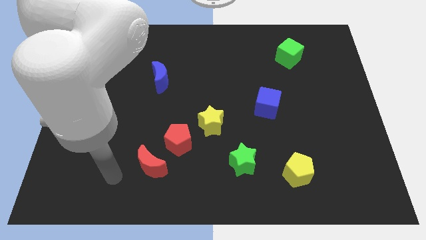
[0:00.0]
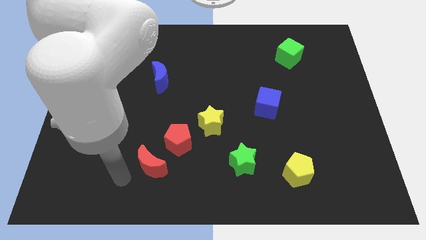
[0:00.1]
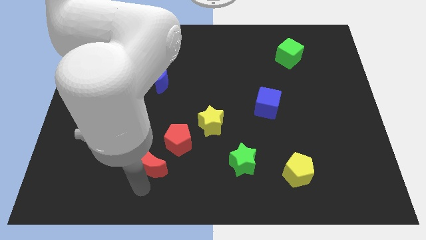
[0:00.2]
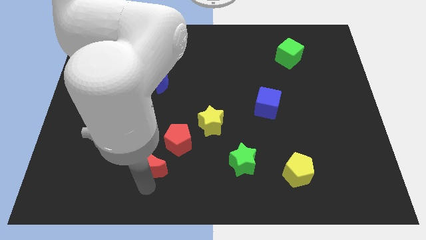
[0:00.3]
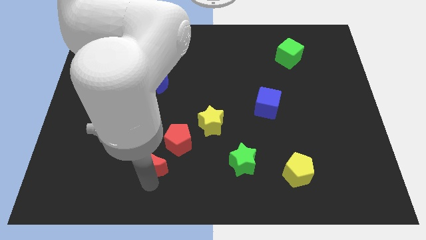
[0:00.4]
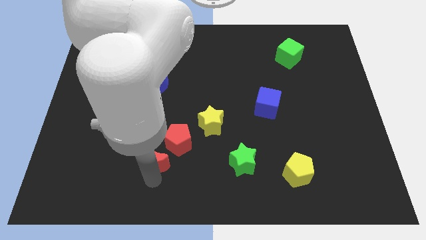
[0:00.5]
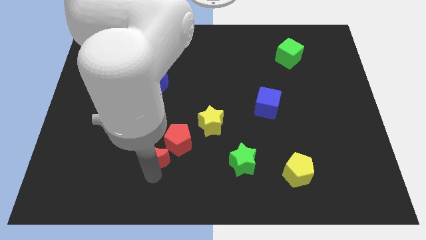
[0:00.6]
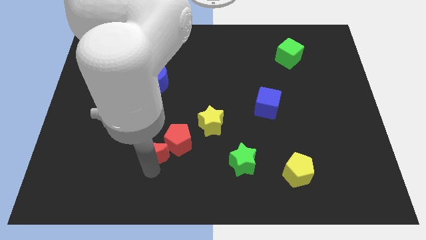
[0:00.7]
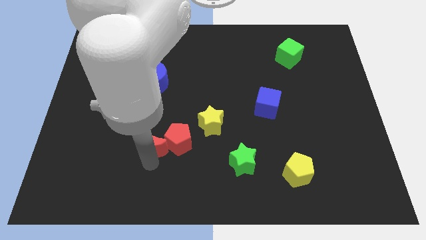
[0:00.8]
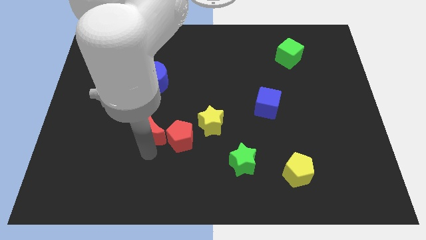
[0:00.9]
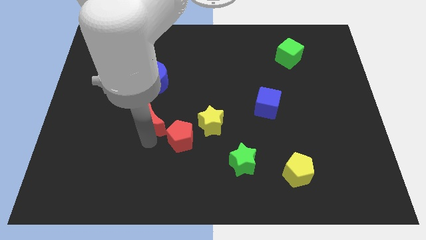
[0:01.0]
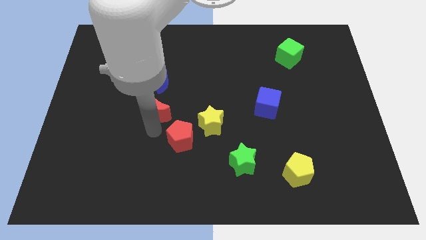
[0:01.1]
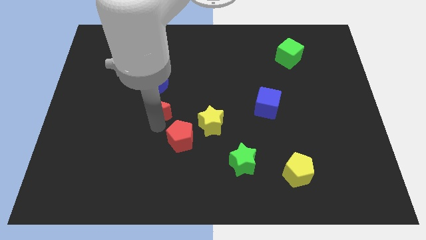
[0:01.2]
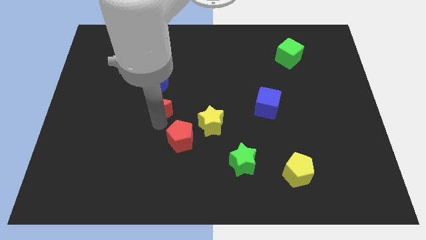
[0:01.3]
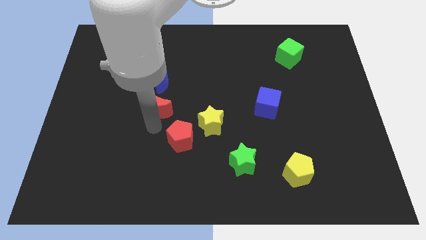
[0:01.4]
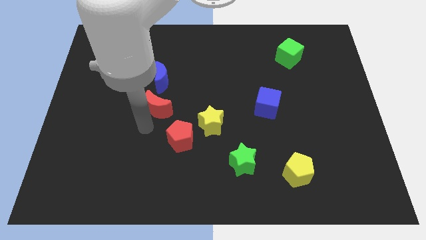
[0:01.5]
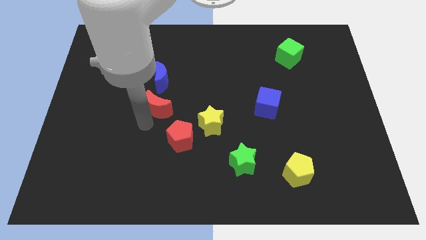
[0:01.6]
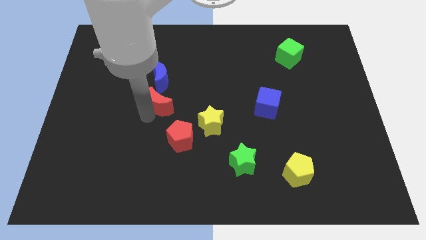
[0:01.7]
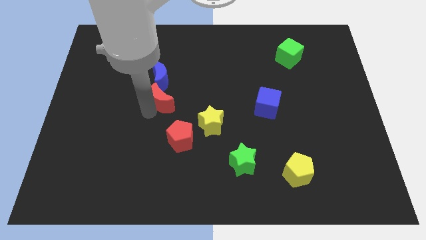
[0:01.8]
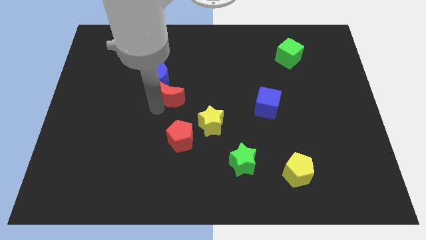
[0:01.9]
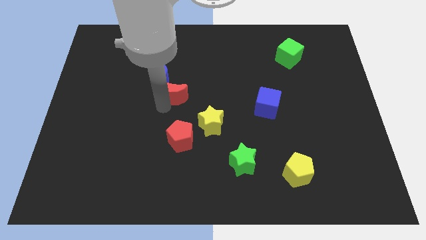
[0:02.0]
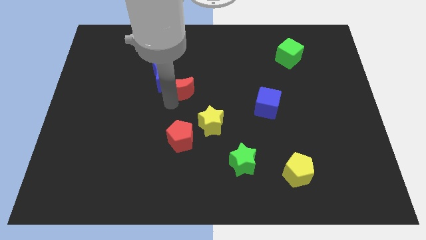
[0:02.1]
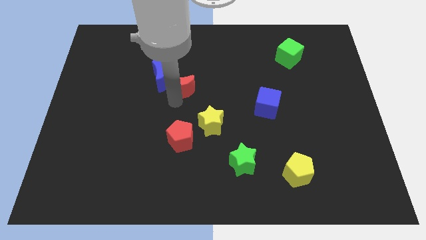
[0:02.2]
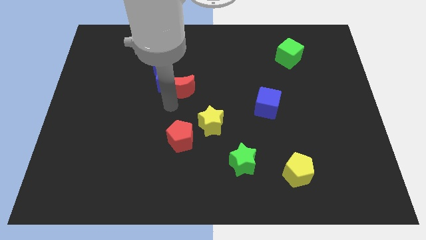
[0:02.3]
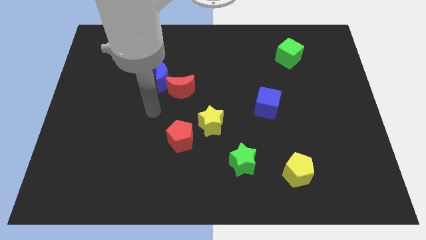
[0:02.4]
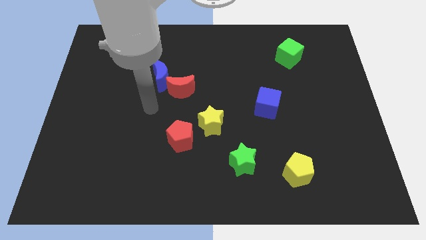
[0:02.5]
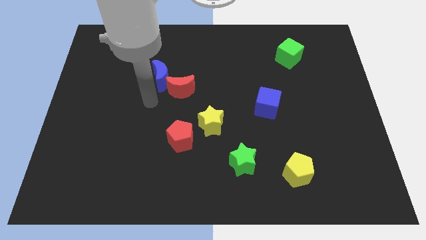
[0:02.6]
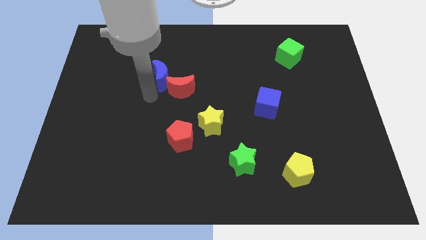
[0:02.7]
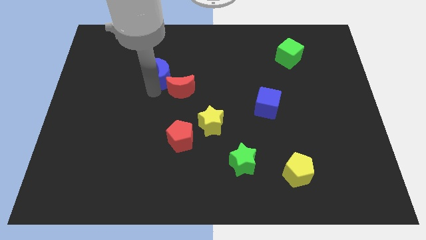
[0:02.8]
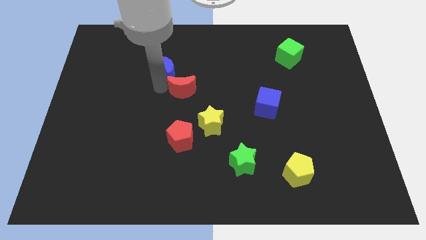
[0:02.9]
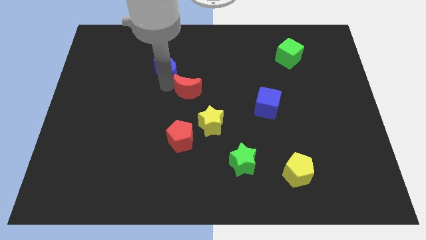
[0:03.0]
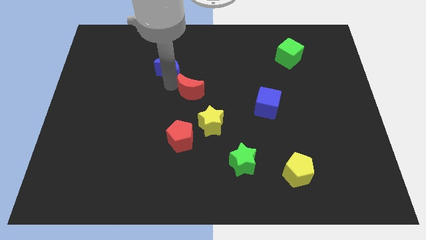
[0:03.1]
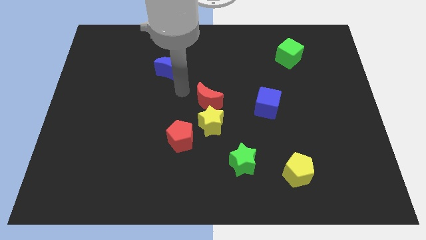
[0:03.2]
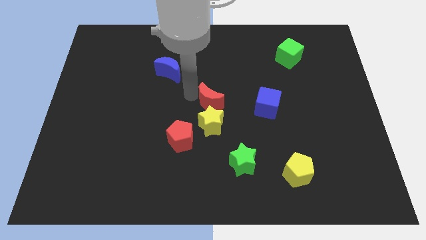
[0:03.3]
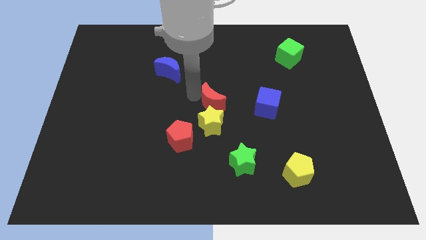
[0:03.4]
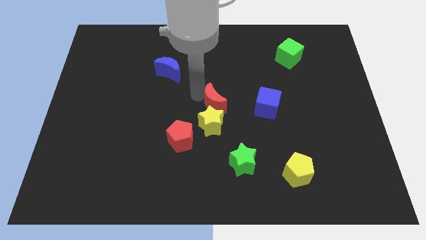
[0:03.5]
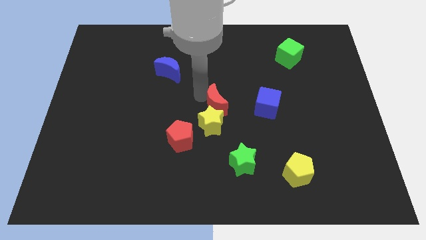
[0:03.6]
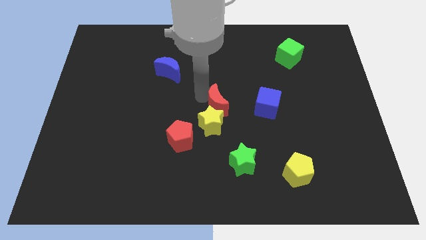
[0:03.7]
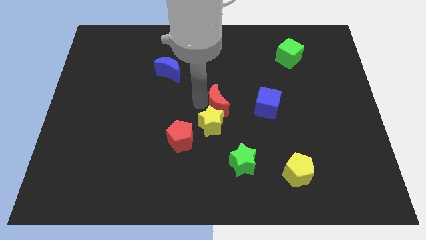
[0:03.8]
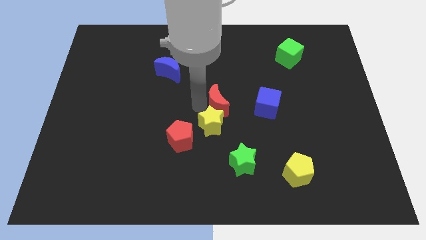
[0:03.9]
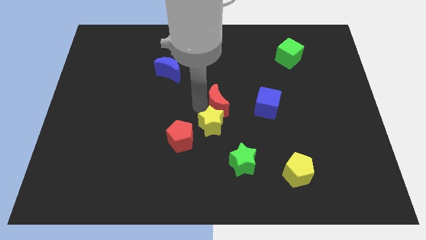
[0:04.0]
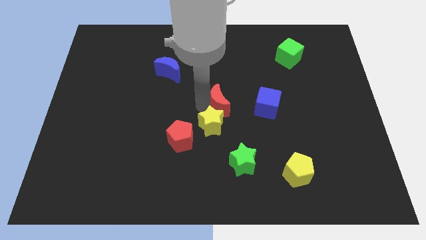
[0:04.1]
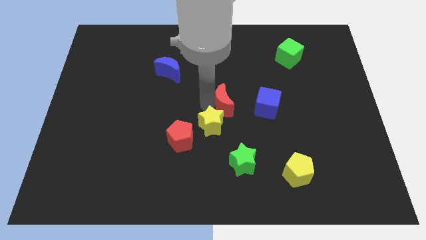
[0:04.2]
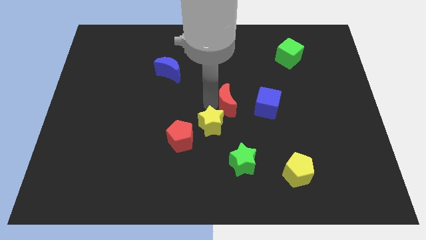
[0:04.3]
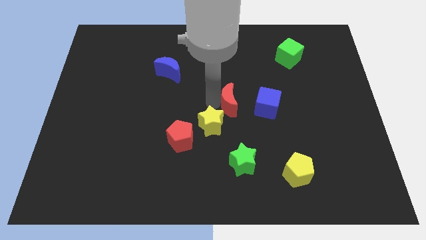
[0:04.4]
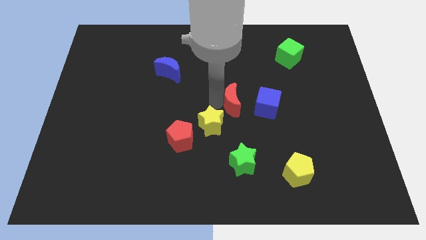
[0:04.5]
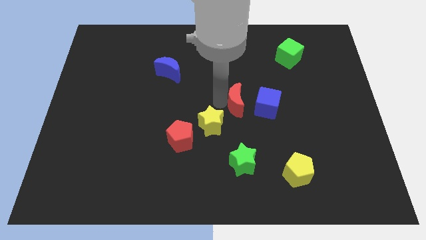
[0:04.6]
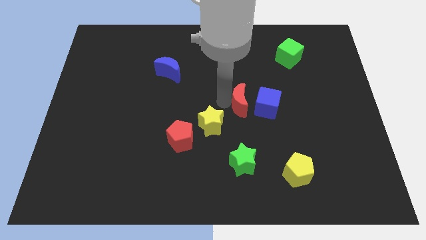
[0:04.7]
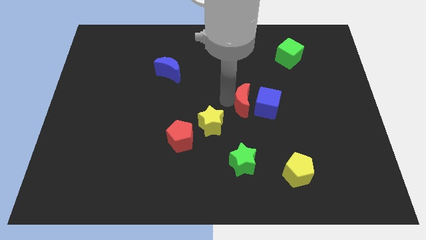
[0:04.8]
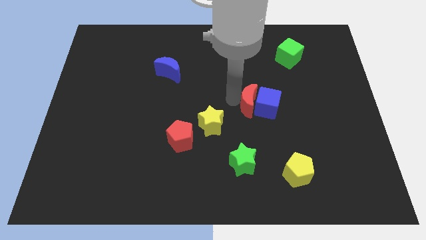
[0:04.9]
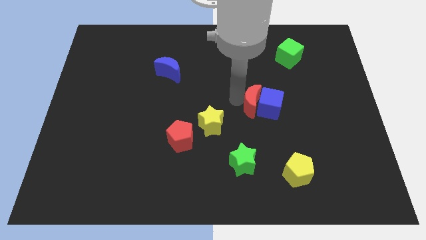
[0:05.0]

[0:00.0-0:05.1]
move the red moon next to the blue cube

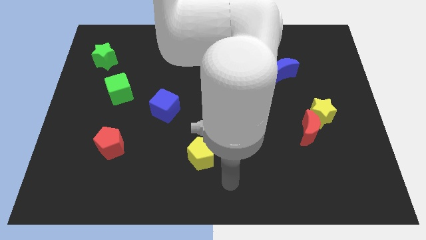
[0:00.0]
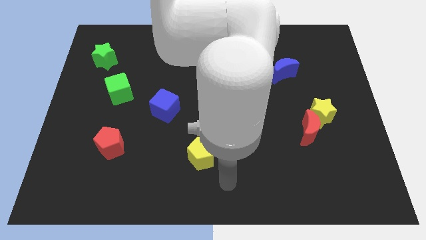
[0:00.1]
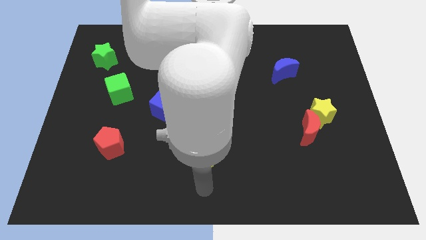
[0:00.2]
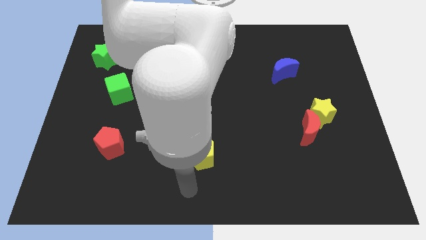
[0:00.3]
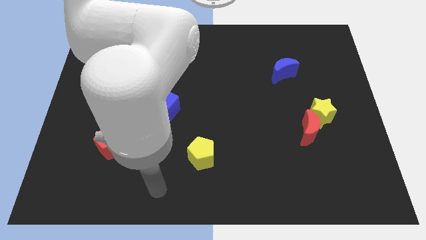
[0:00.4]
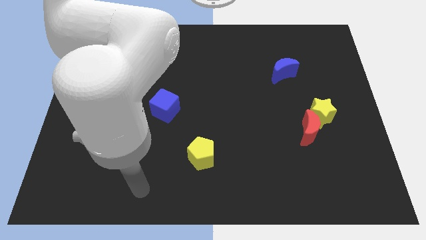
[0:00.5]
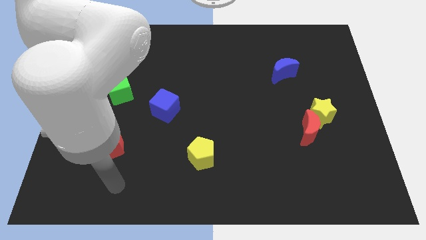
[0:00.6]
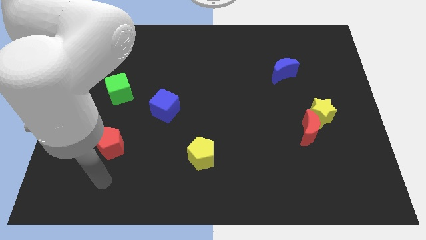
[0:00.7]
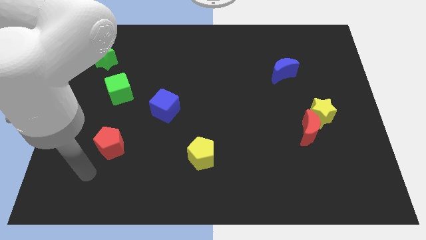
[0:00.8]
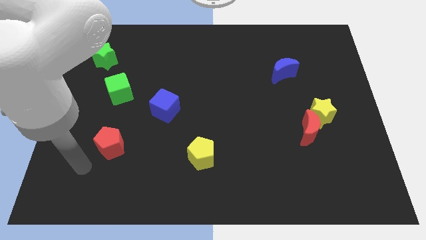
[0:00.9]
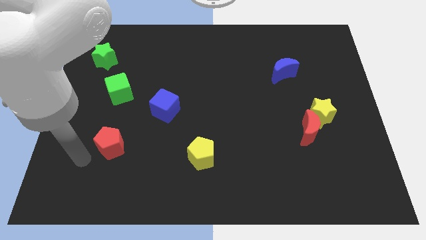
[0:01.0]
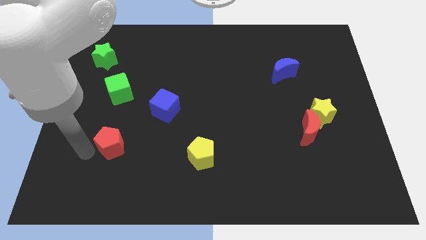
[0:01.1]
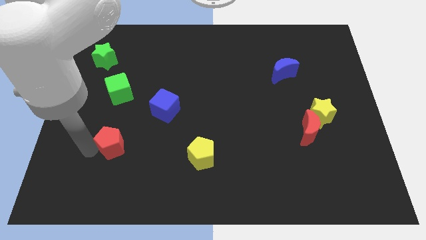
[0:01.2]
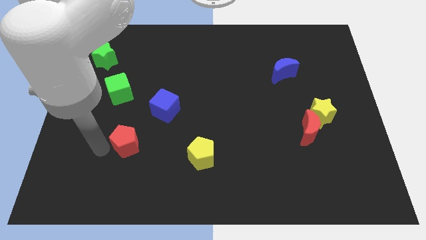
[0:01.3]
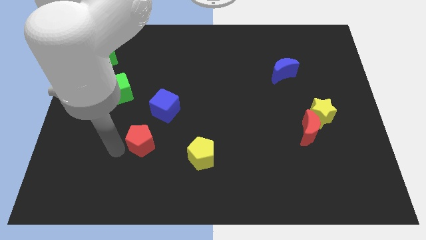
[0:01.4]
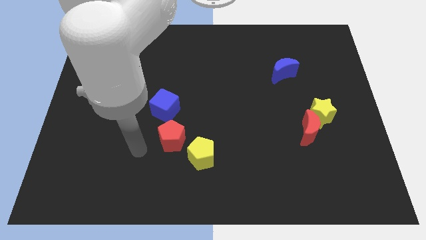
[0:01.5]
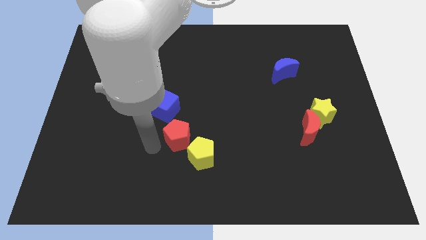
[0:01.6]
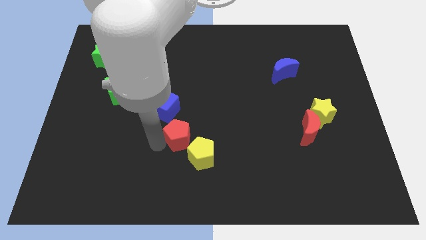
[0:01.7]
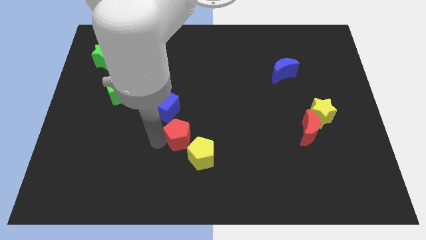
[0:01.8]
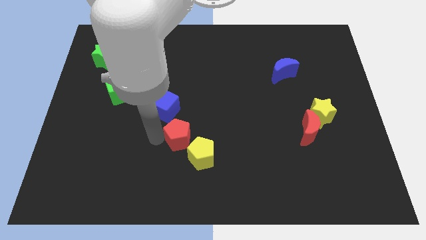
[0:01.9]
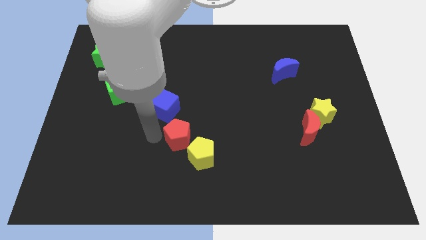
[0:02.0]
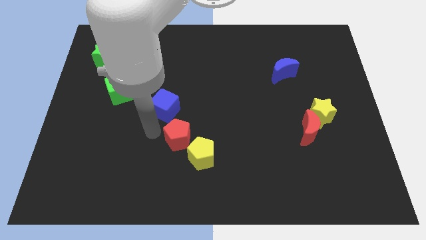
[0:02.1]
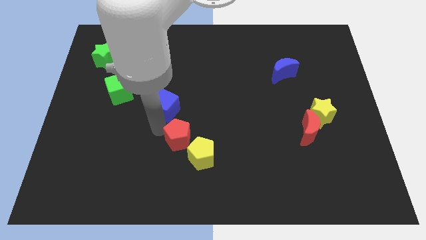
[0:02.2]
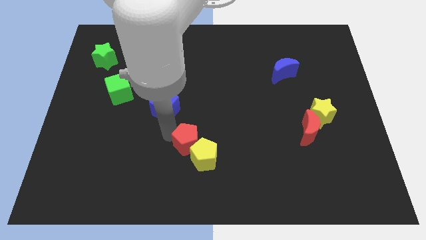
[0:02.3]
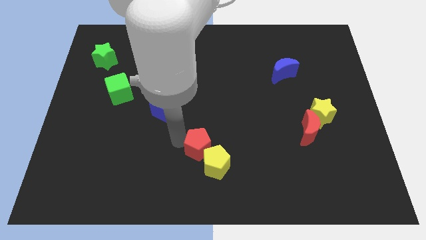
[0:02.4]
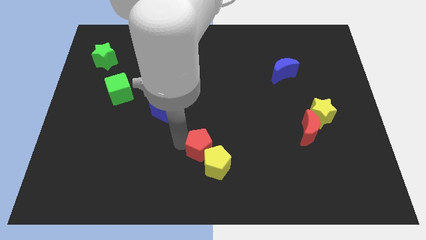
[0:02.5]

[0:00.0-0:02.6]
put the red pentagon next to the yellow pentagon

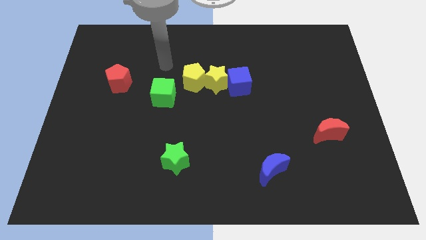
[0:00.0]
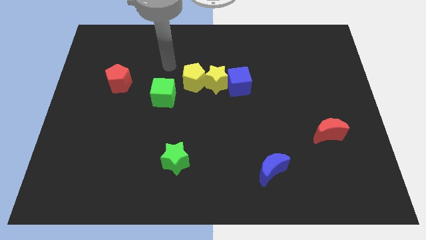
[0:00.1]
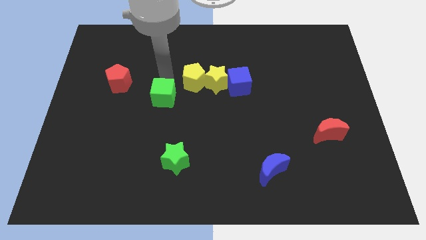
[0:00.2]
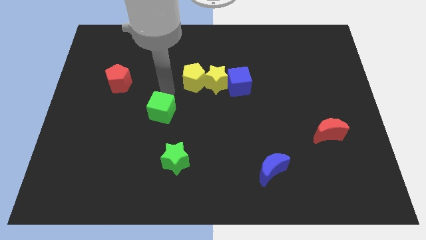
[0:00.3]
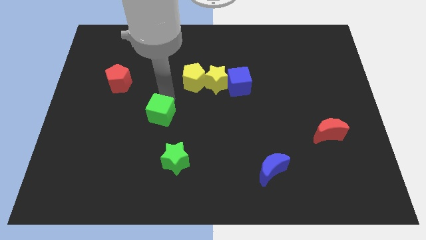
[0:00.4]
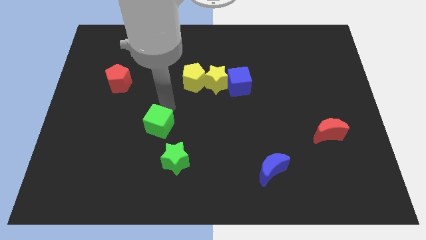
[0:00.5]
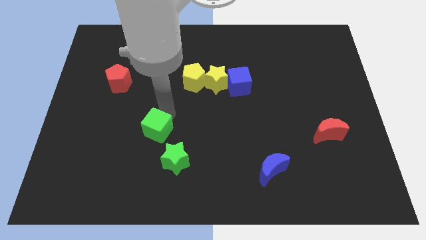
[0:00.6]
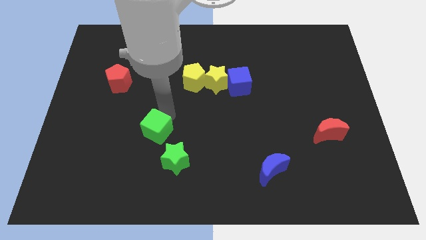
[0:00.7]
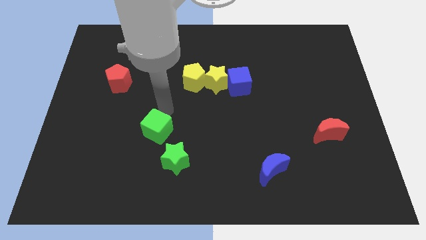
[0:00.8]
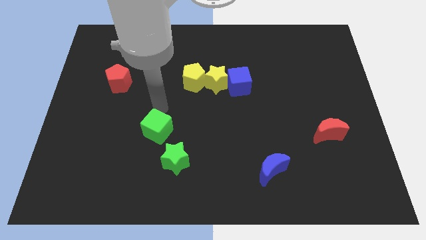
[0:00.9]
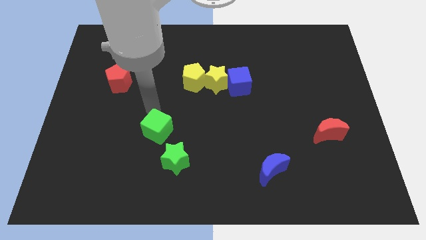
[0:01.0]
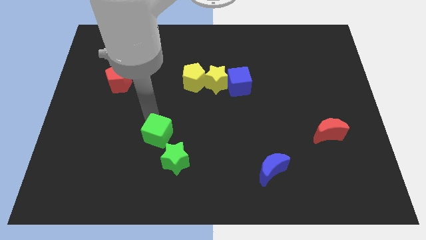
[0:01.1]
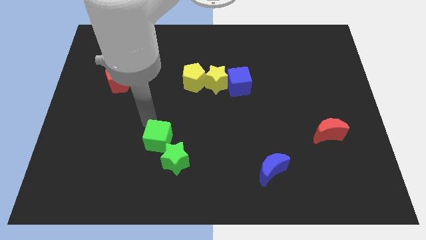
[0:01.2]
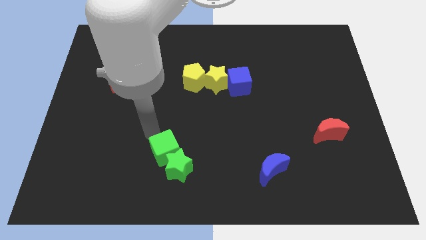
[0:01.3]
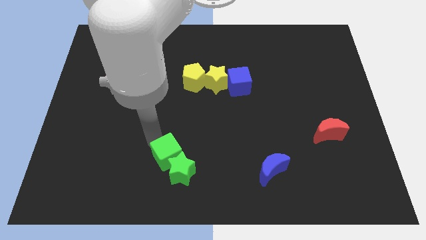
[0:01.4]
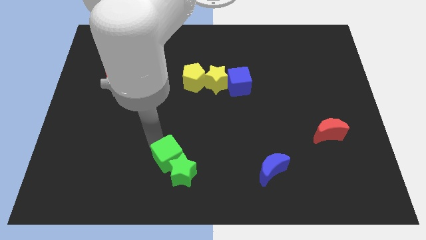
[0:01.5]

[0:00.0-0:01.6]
move the green cube to the green star
